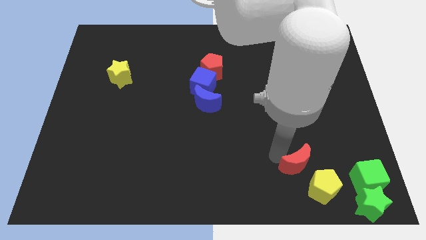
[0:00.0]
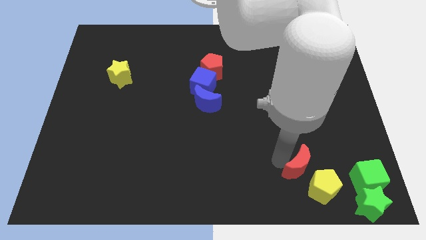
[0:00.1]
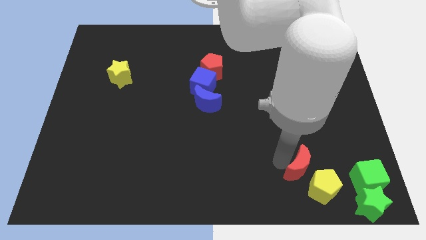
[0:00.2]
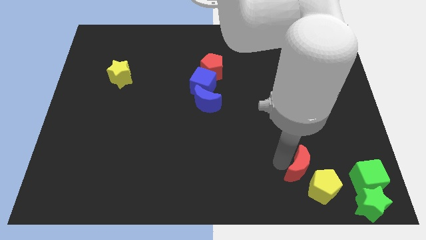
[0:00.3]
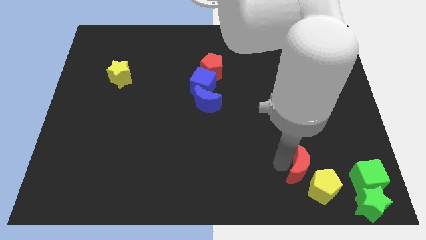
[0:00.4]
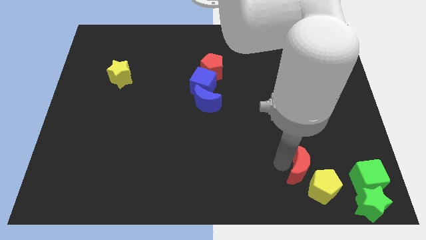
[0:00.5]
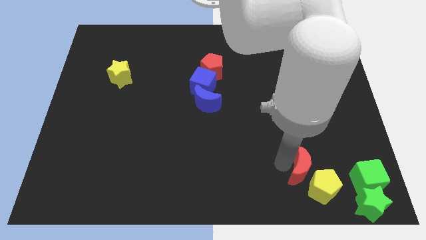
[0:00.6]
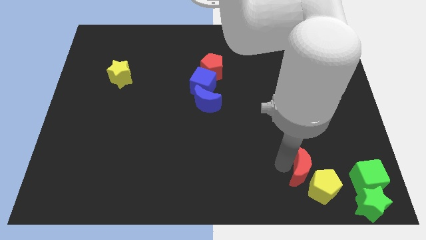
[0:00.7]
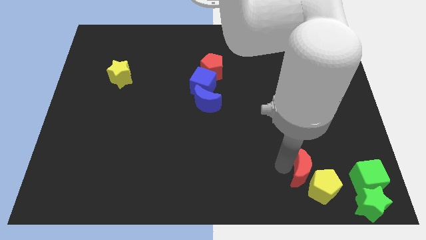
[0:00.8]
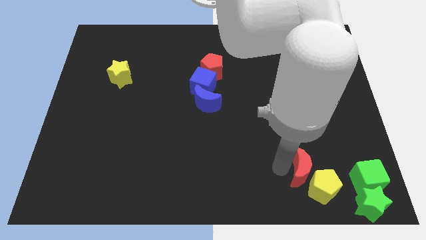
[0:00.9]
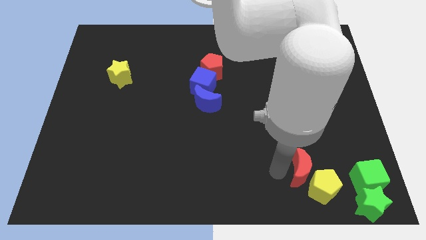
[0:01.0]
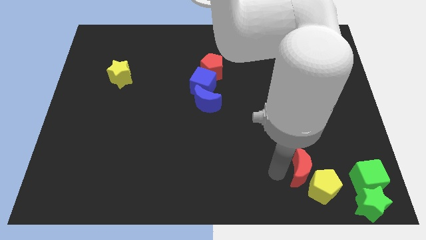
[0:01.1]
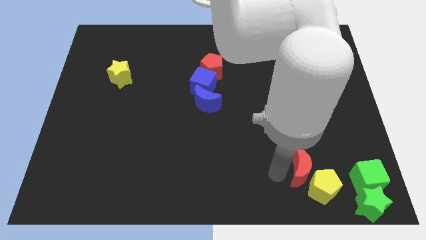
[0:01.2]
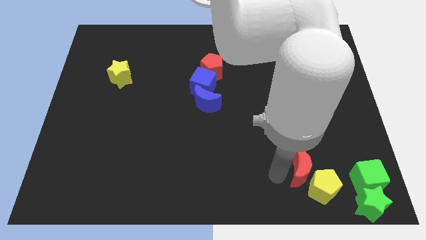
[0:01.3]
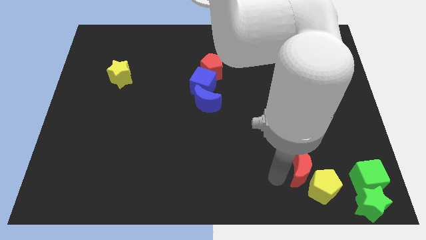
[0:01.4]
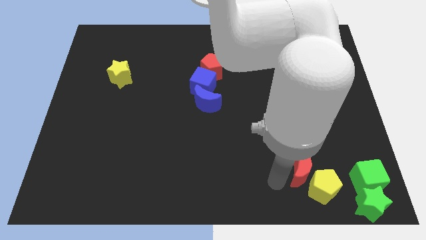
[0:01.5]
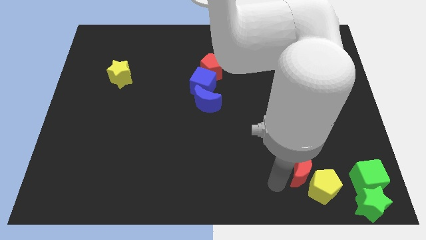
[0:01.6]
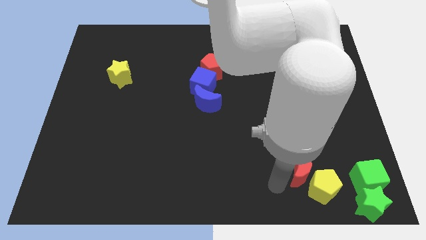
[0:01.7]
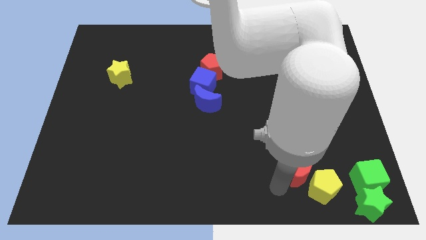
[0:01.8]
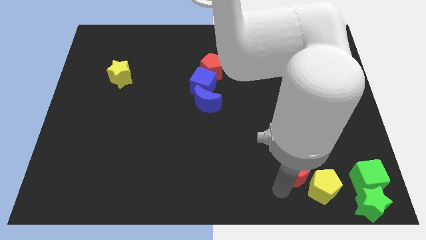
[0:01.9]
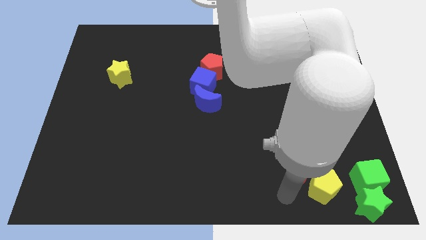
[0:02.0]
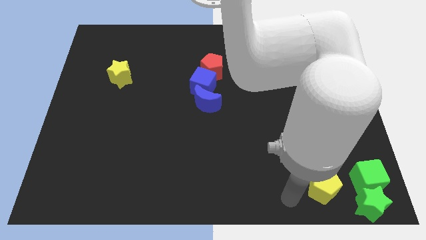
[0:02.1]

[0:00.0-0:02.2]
place red moon close to the yellow pentagon

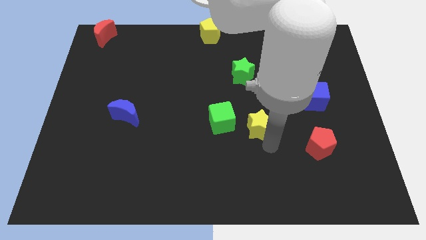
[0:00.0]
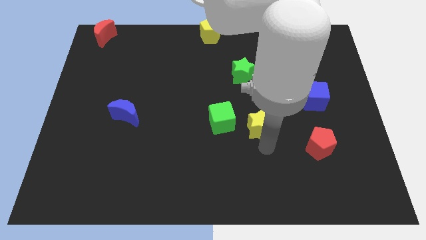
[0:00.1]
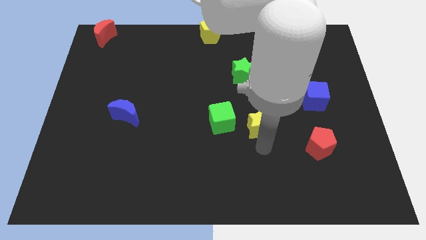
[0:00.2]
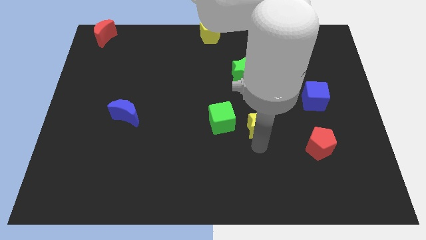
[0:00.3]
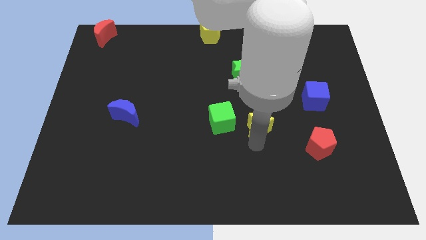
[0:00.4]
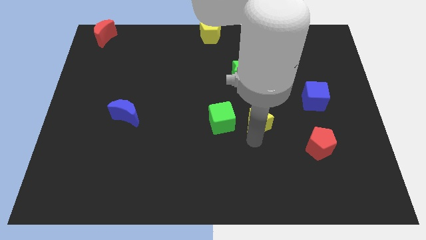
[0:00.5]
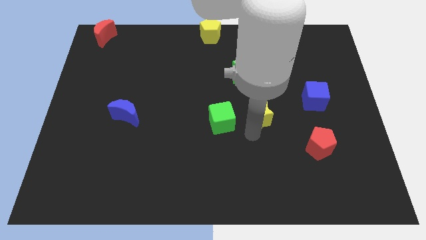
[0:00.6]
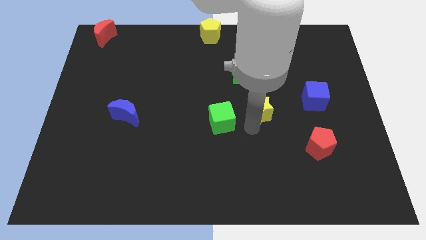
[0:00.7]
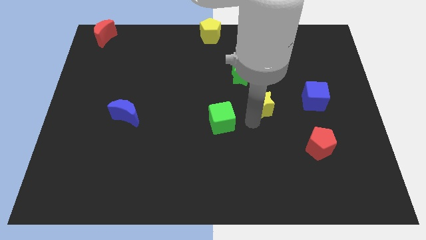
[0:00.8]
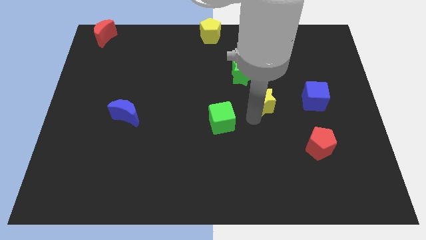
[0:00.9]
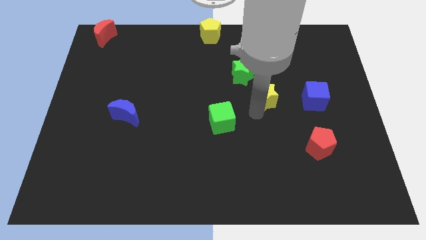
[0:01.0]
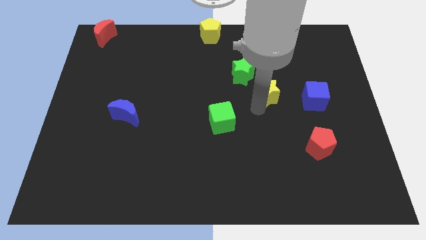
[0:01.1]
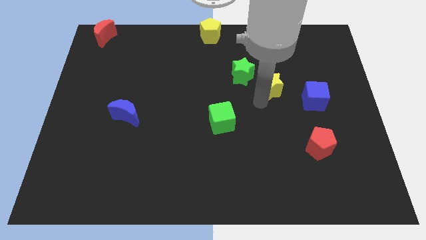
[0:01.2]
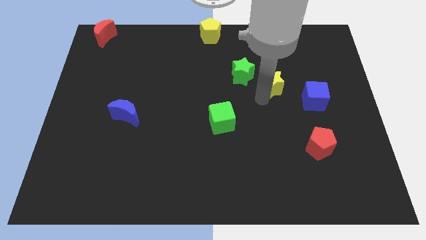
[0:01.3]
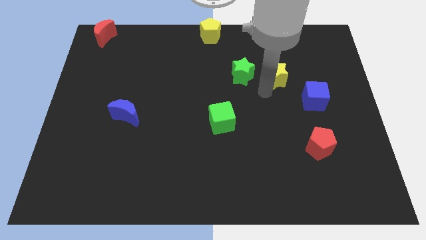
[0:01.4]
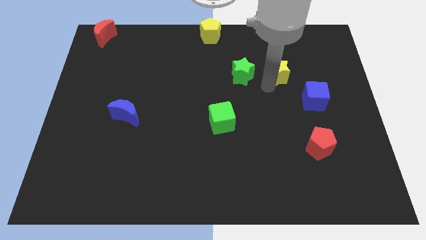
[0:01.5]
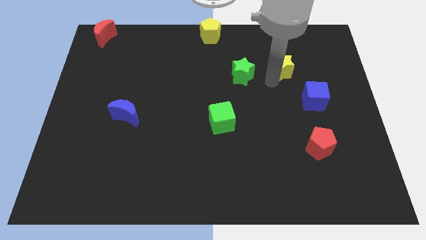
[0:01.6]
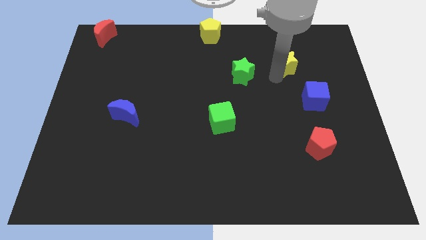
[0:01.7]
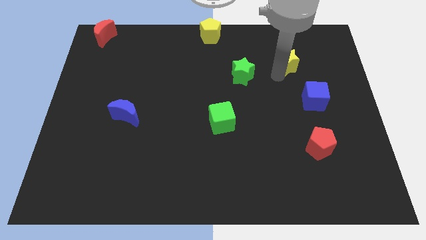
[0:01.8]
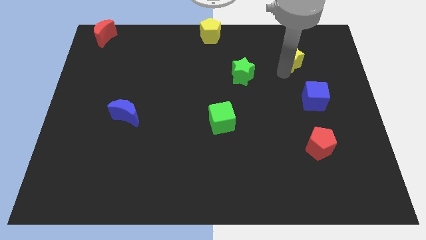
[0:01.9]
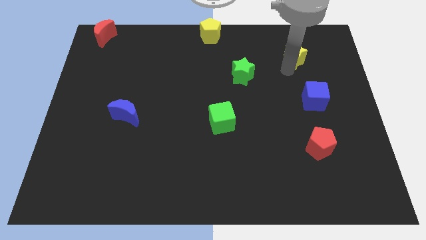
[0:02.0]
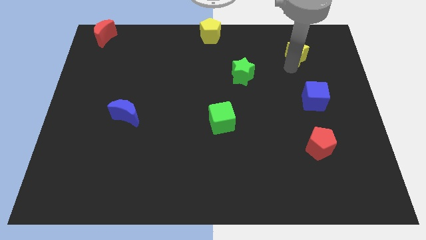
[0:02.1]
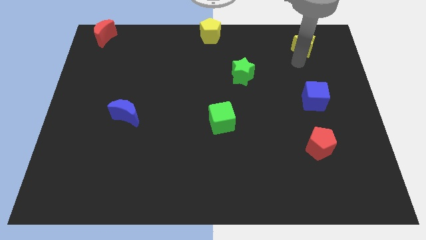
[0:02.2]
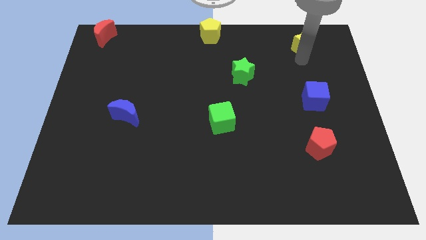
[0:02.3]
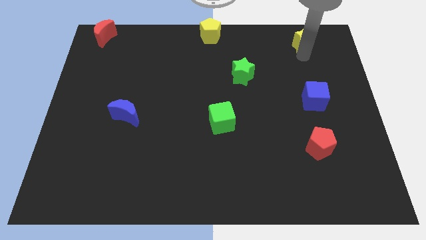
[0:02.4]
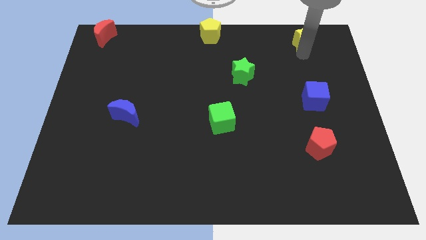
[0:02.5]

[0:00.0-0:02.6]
move the yellow star towards the top right side

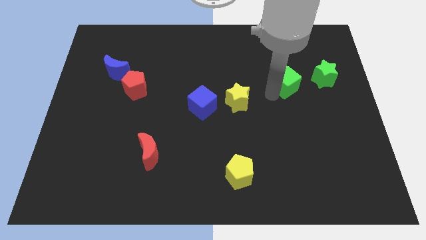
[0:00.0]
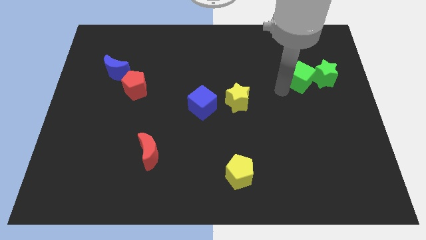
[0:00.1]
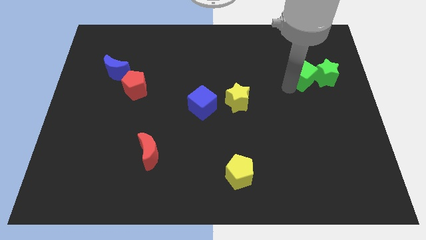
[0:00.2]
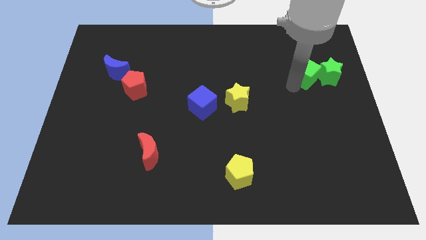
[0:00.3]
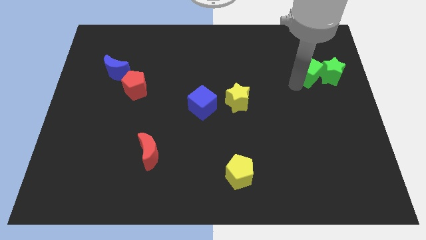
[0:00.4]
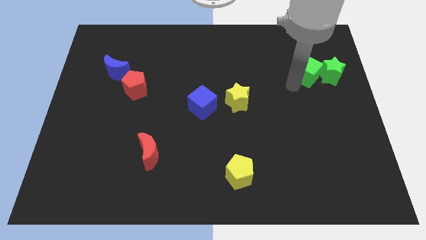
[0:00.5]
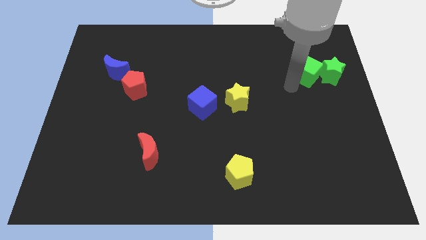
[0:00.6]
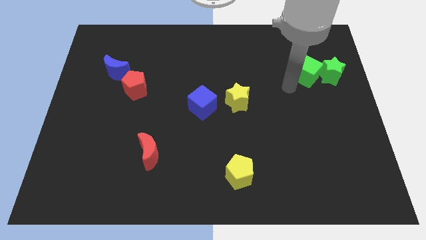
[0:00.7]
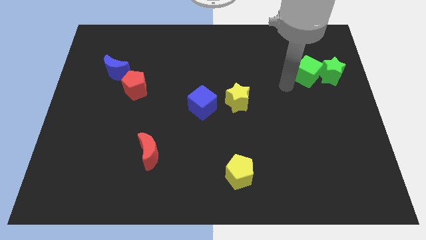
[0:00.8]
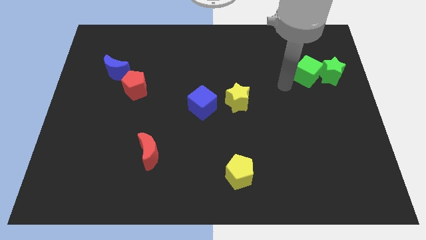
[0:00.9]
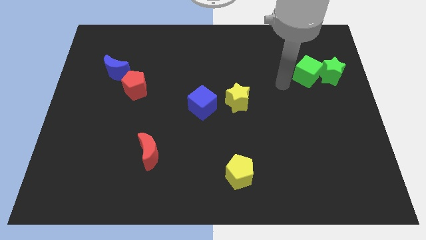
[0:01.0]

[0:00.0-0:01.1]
place the green cube into the green star

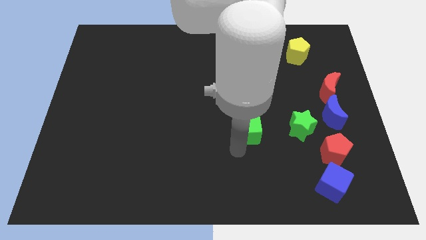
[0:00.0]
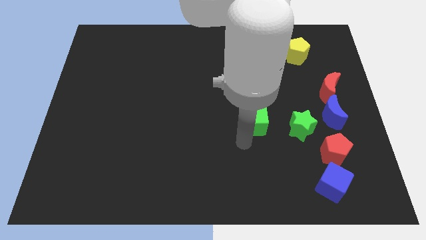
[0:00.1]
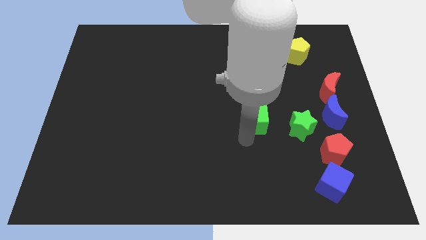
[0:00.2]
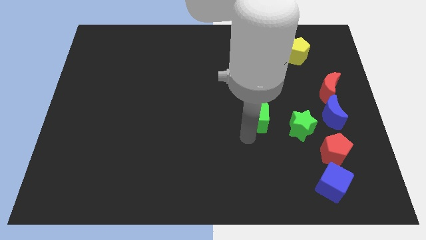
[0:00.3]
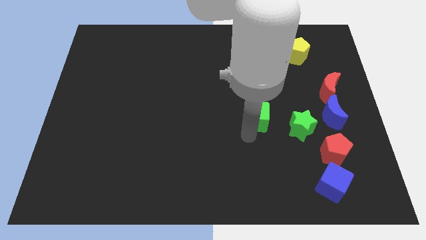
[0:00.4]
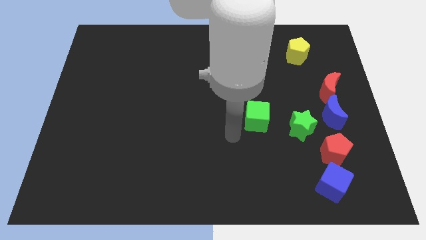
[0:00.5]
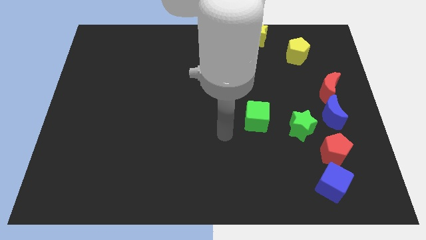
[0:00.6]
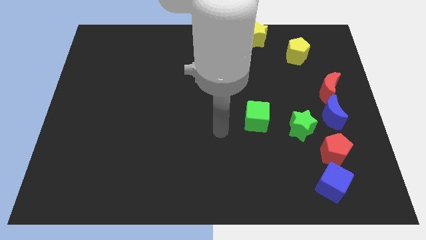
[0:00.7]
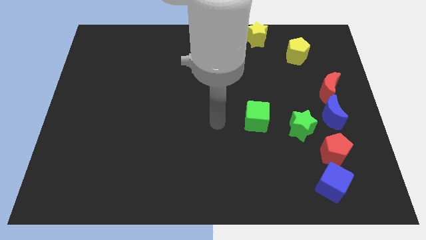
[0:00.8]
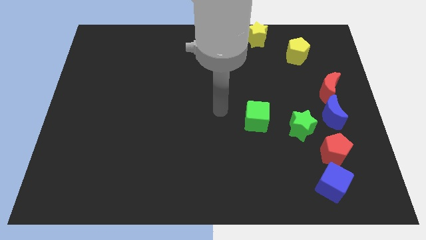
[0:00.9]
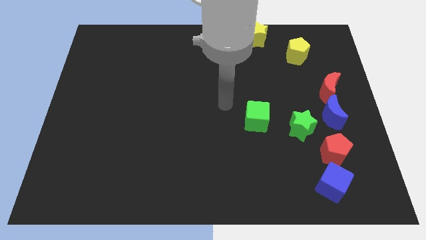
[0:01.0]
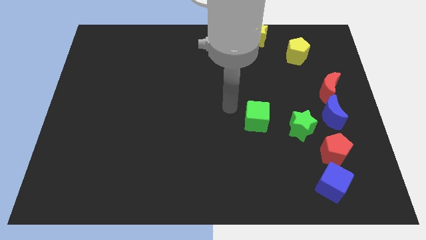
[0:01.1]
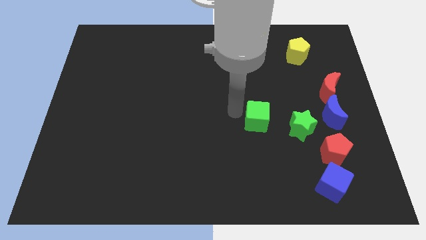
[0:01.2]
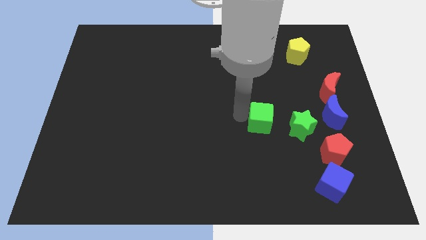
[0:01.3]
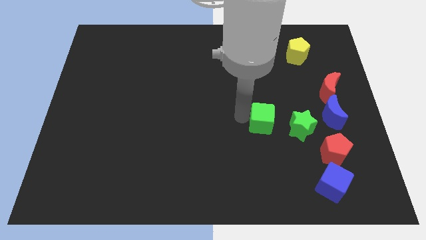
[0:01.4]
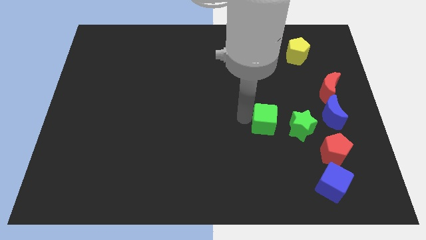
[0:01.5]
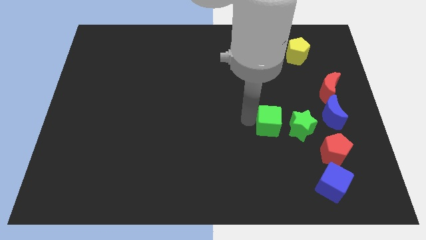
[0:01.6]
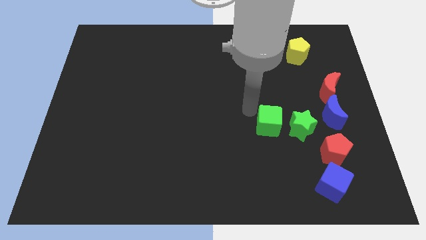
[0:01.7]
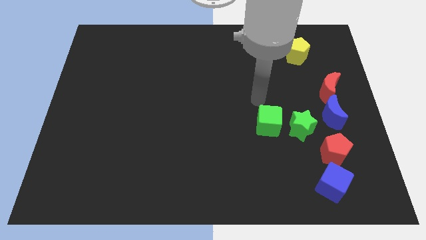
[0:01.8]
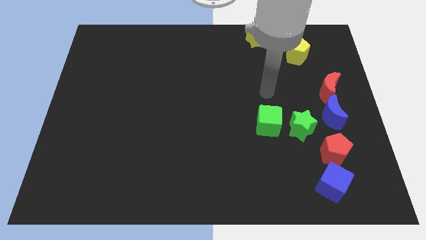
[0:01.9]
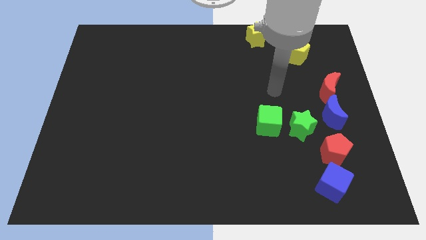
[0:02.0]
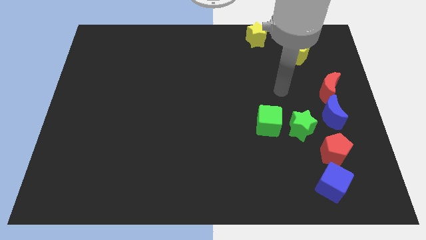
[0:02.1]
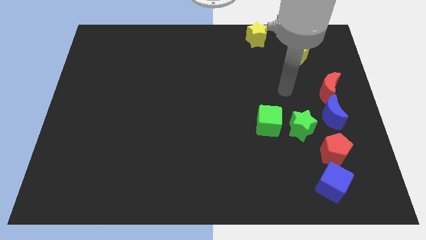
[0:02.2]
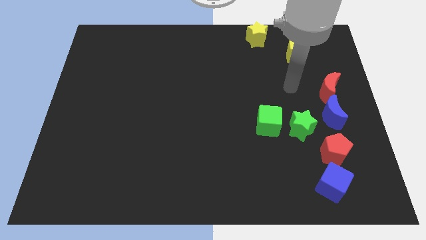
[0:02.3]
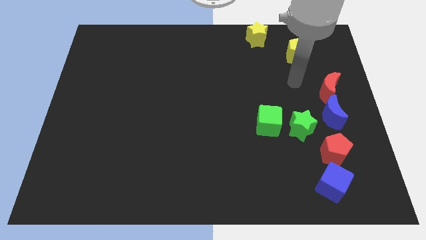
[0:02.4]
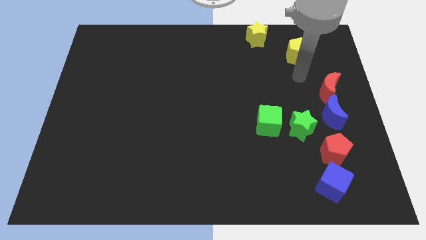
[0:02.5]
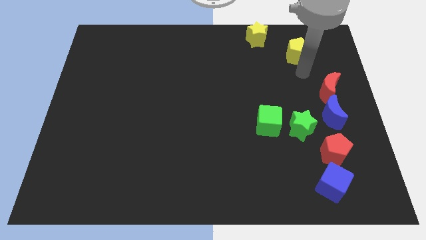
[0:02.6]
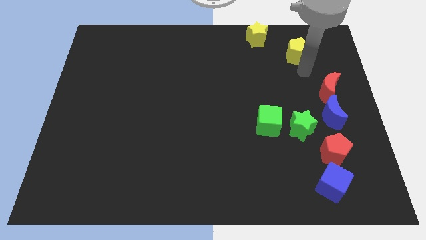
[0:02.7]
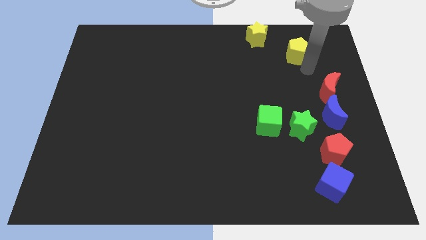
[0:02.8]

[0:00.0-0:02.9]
place your hand diagonally bottom right to yellow pentagon

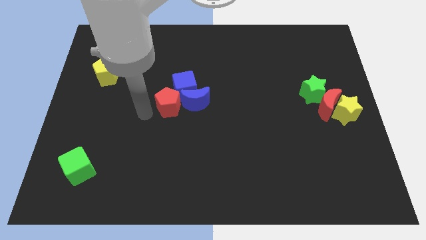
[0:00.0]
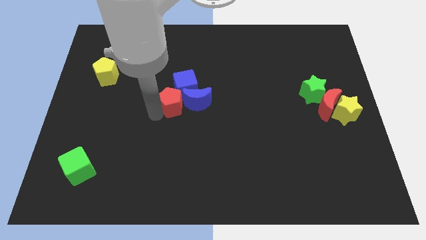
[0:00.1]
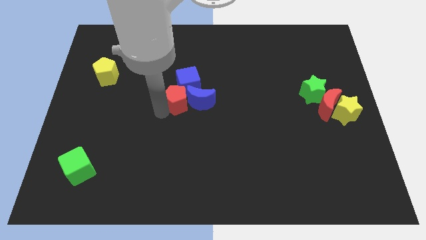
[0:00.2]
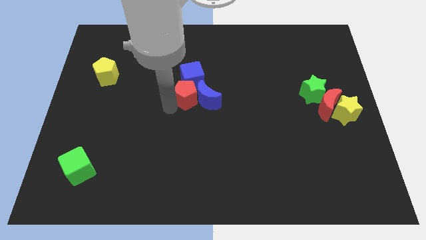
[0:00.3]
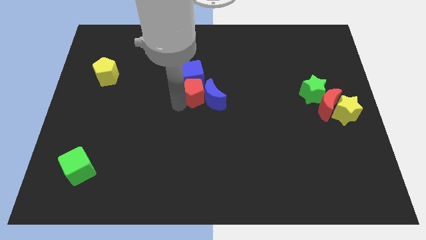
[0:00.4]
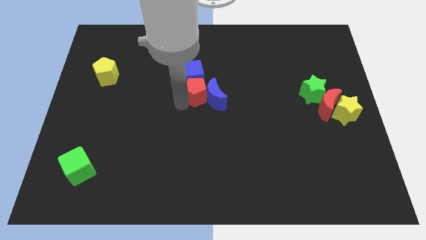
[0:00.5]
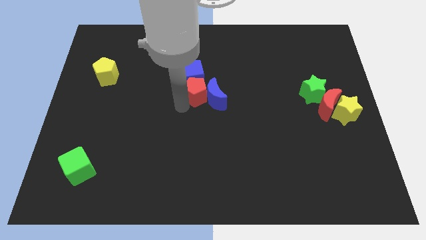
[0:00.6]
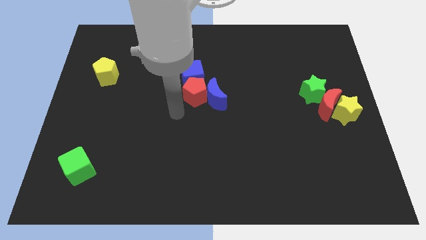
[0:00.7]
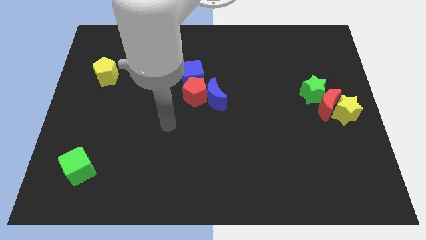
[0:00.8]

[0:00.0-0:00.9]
place red pentagon below blue cube
